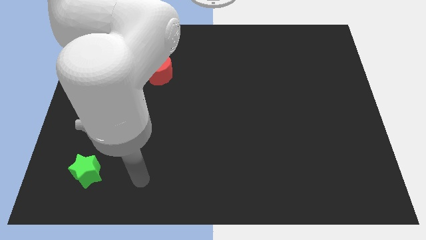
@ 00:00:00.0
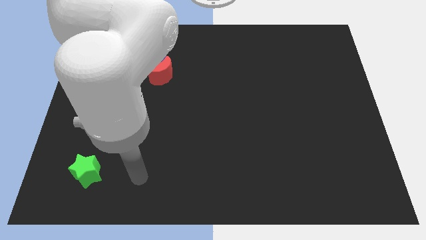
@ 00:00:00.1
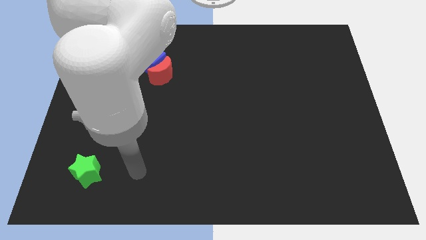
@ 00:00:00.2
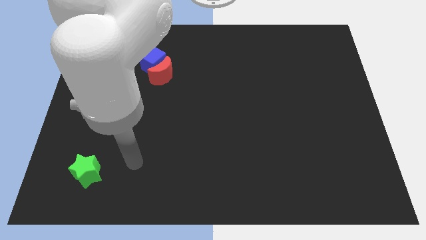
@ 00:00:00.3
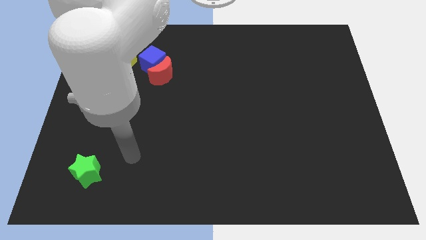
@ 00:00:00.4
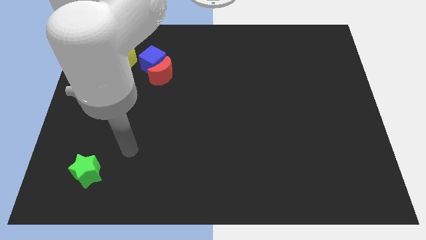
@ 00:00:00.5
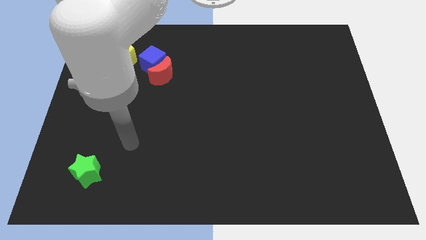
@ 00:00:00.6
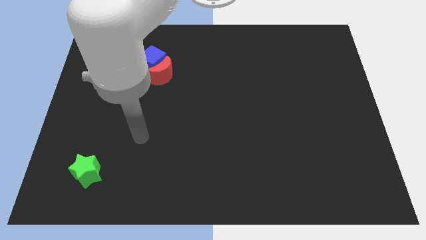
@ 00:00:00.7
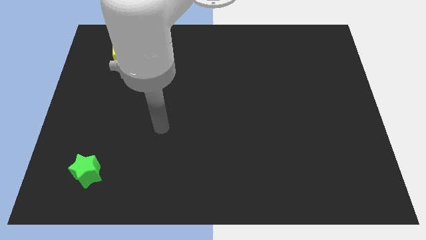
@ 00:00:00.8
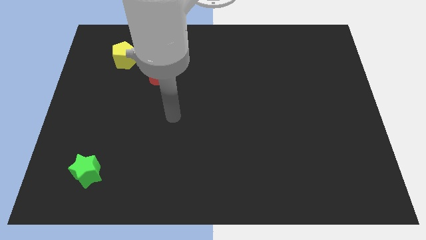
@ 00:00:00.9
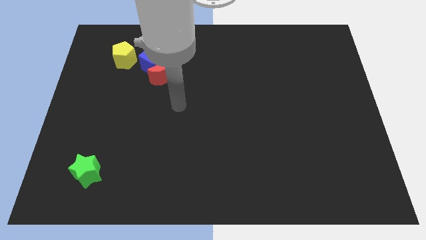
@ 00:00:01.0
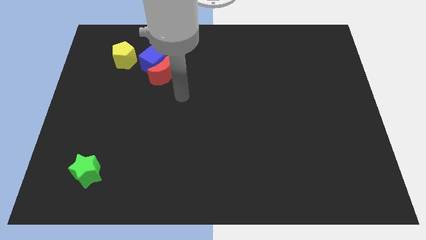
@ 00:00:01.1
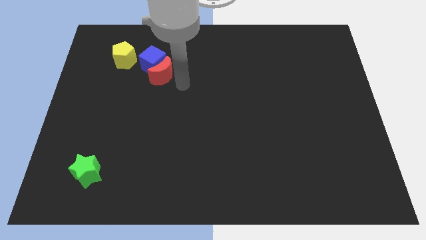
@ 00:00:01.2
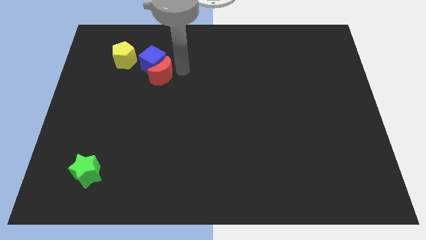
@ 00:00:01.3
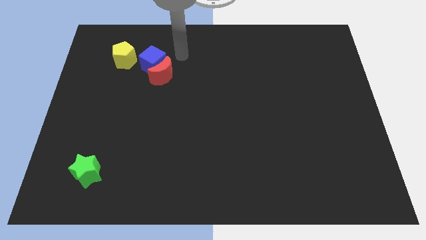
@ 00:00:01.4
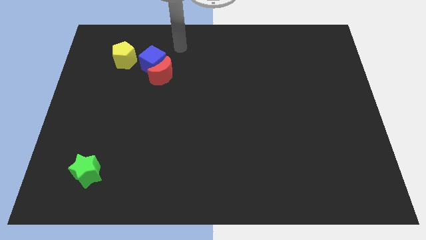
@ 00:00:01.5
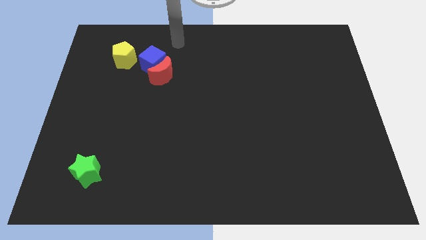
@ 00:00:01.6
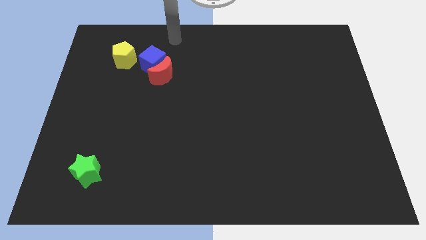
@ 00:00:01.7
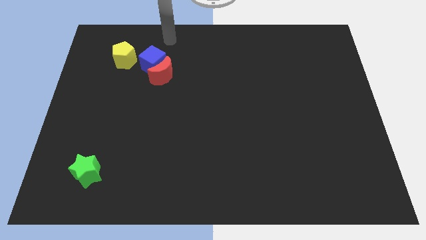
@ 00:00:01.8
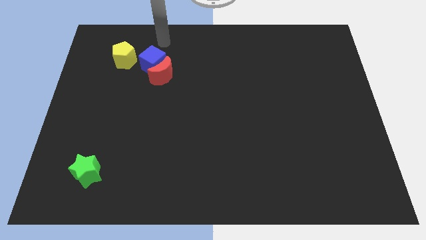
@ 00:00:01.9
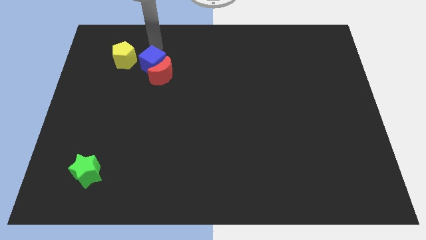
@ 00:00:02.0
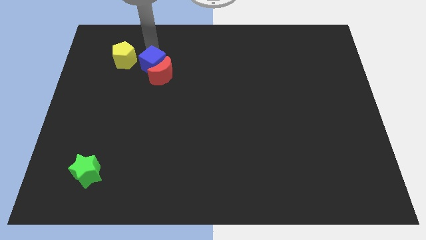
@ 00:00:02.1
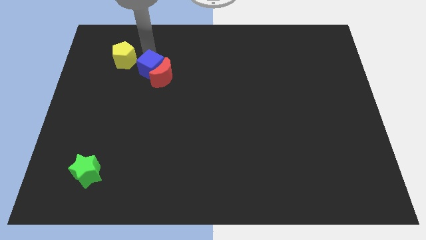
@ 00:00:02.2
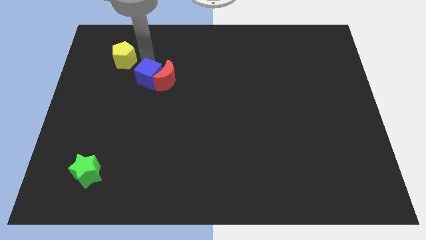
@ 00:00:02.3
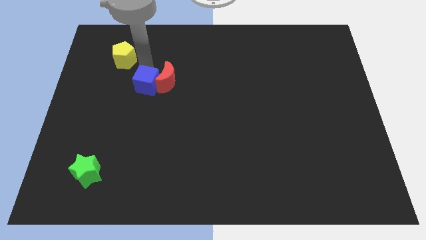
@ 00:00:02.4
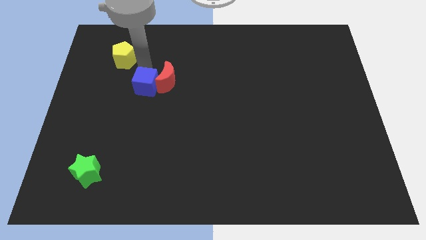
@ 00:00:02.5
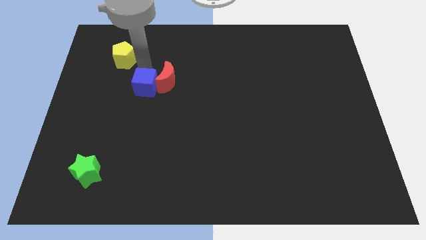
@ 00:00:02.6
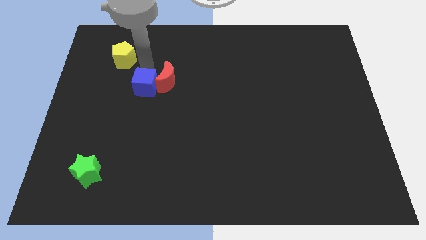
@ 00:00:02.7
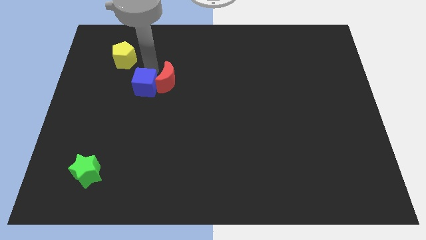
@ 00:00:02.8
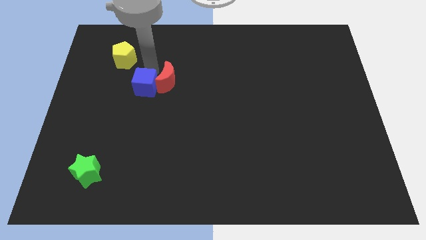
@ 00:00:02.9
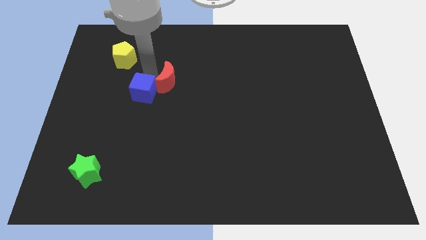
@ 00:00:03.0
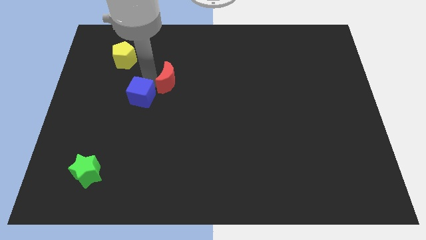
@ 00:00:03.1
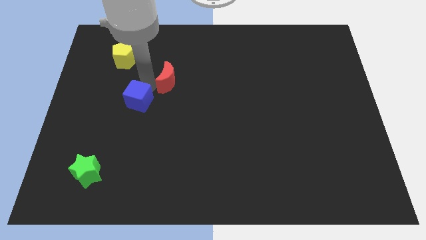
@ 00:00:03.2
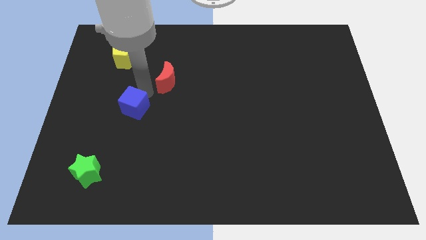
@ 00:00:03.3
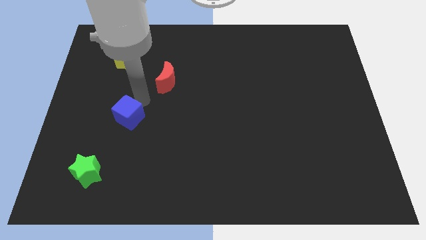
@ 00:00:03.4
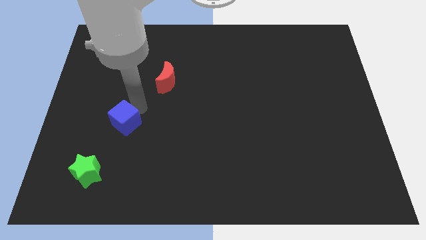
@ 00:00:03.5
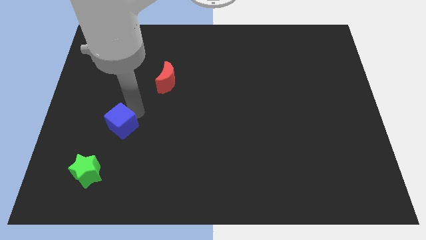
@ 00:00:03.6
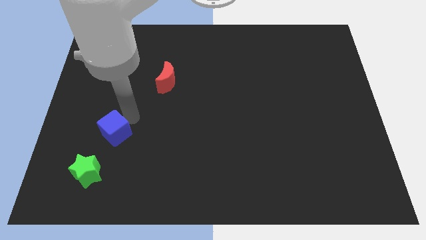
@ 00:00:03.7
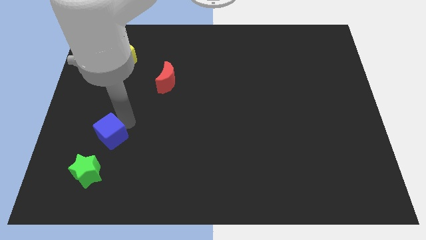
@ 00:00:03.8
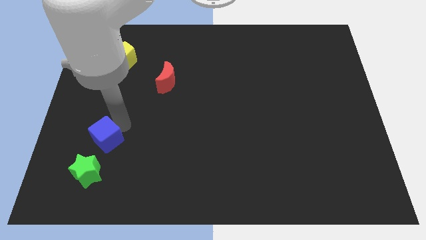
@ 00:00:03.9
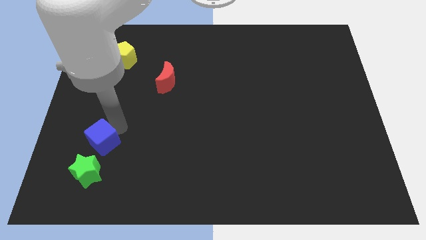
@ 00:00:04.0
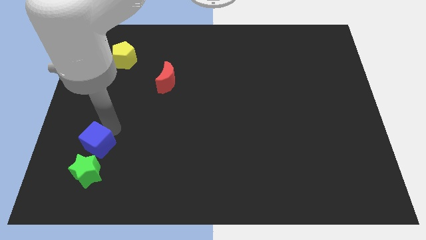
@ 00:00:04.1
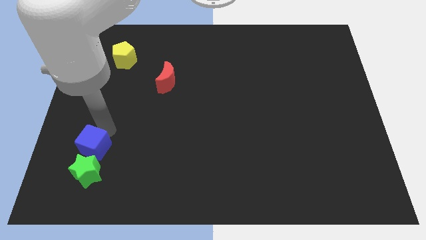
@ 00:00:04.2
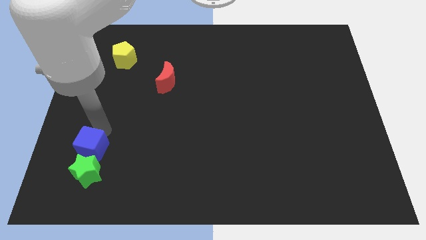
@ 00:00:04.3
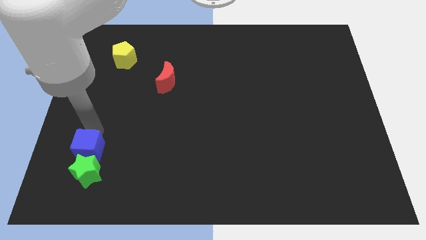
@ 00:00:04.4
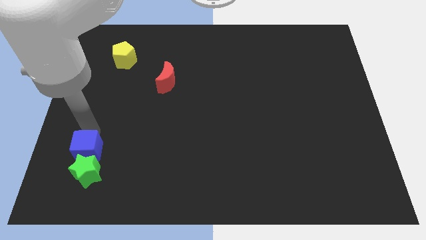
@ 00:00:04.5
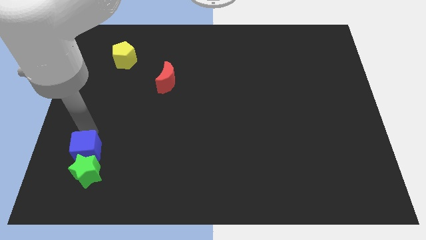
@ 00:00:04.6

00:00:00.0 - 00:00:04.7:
move the blue block towards the star

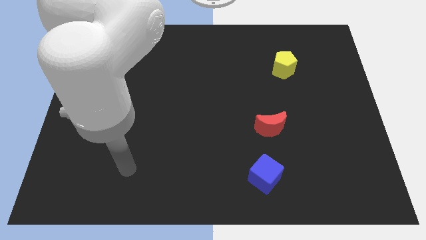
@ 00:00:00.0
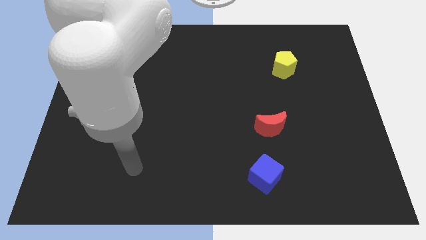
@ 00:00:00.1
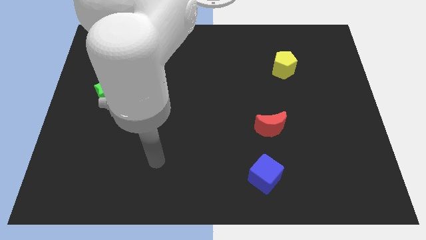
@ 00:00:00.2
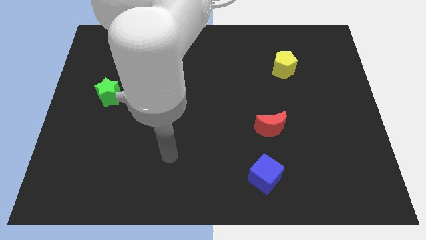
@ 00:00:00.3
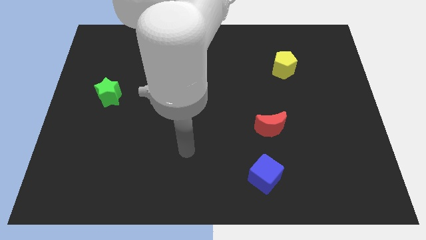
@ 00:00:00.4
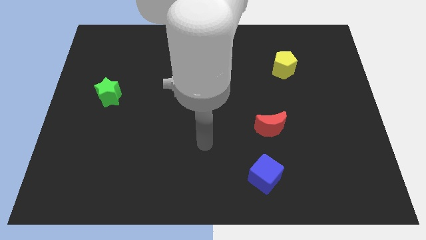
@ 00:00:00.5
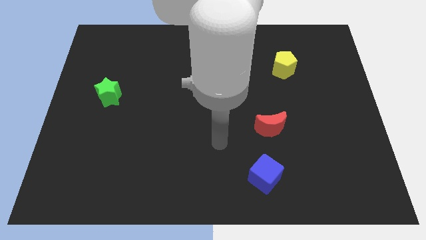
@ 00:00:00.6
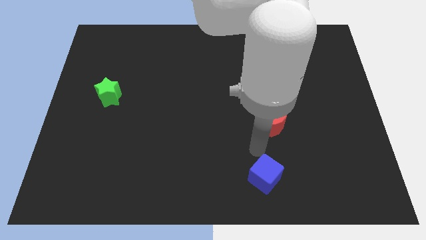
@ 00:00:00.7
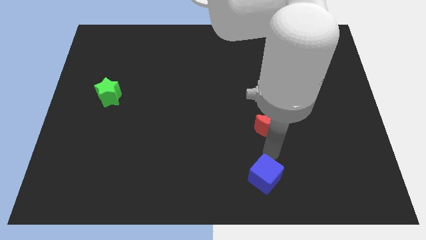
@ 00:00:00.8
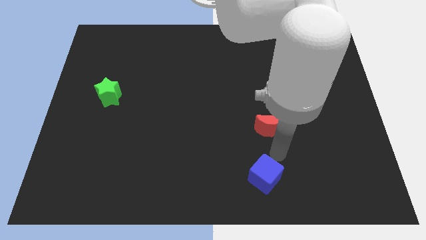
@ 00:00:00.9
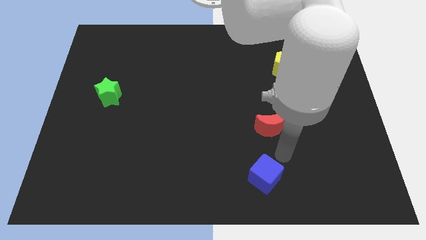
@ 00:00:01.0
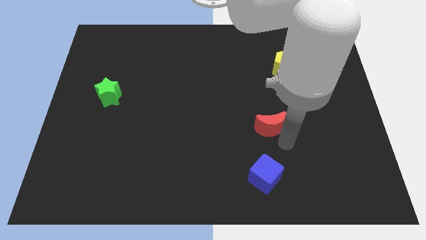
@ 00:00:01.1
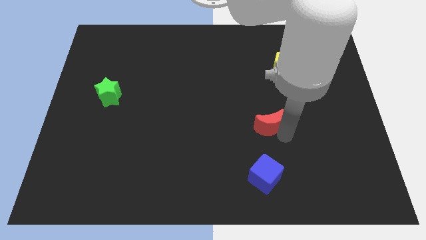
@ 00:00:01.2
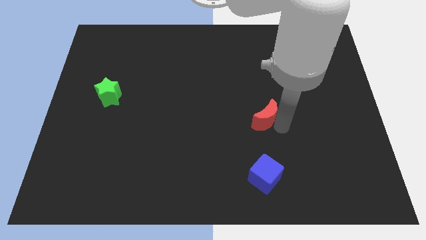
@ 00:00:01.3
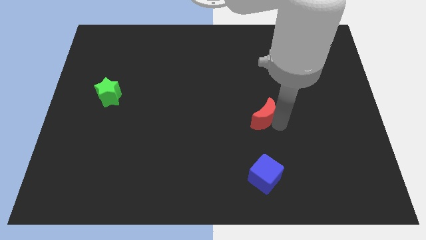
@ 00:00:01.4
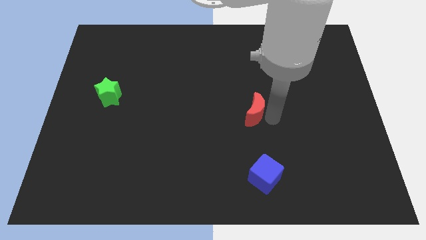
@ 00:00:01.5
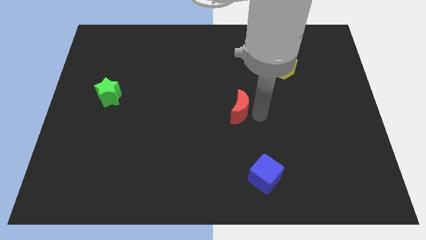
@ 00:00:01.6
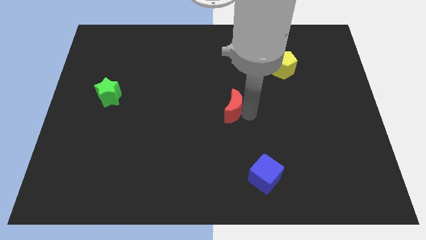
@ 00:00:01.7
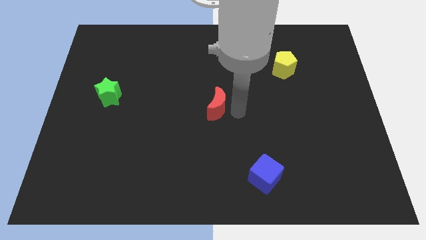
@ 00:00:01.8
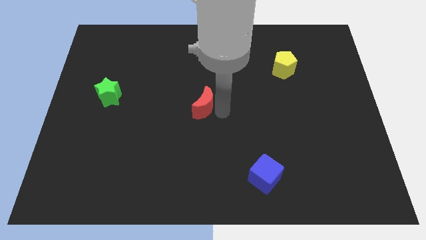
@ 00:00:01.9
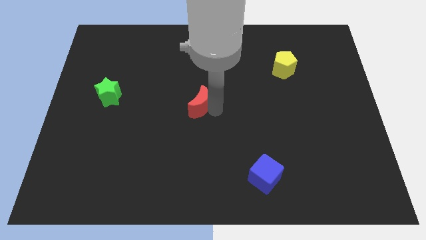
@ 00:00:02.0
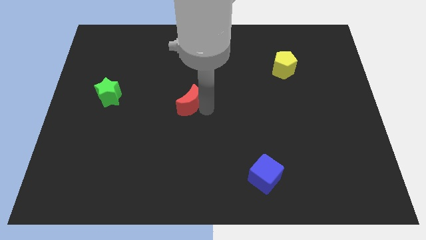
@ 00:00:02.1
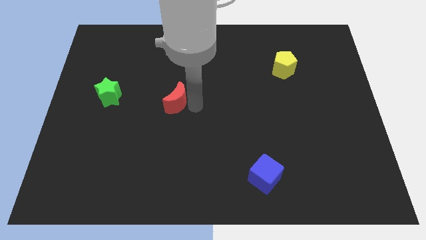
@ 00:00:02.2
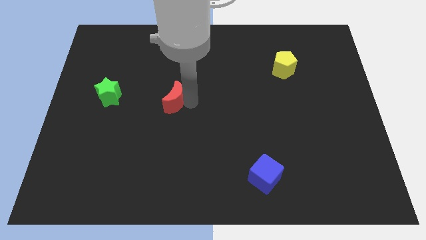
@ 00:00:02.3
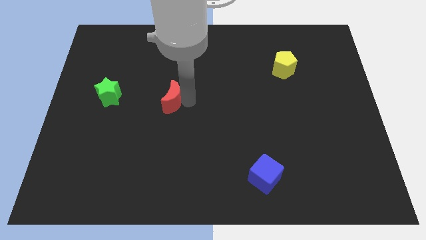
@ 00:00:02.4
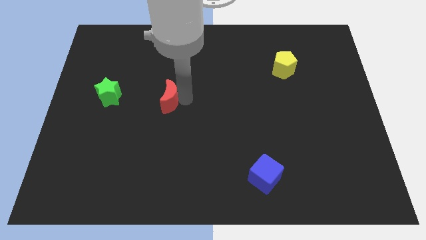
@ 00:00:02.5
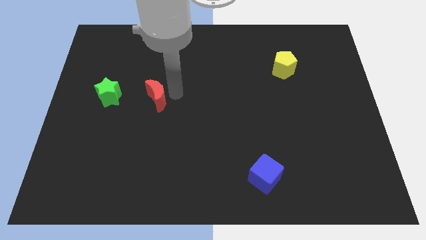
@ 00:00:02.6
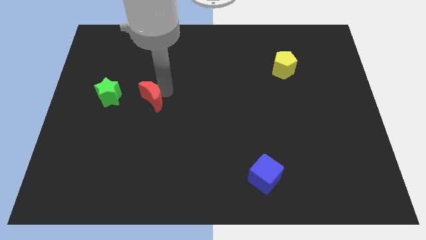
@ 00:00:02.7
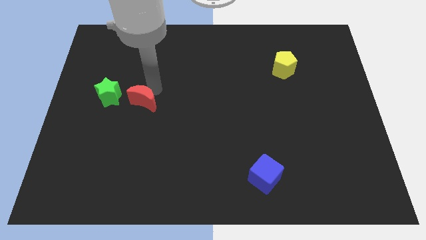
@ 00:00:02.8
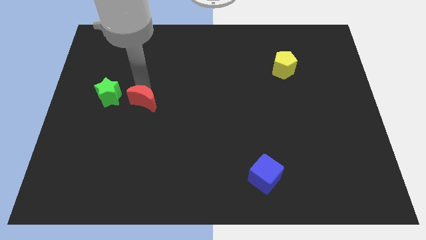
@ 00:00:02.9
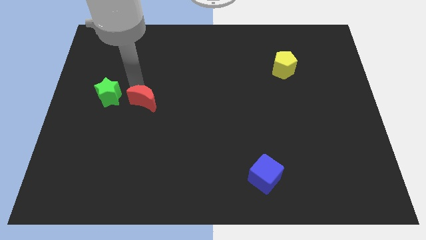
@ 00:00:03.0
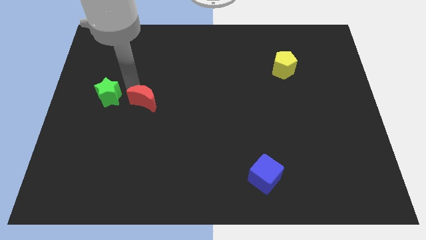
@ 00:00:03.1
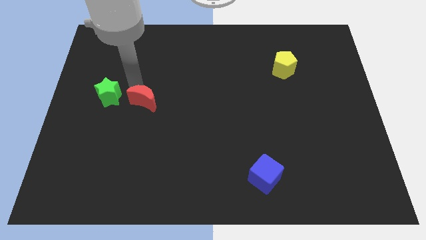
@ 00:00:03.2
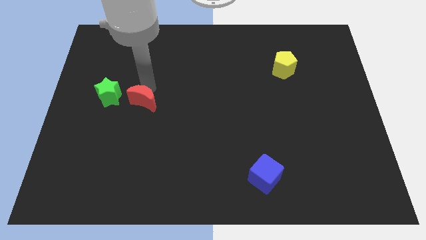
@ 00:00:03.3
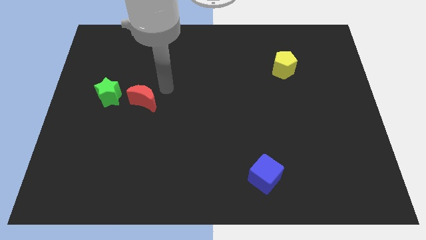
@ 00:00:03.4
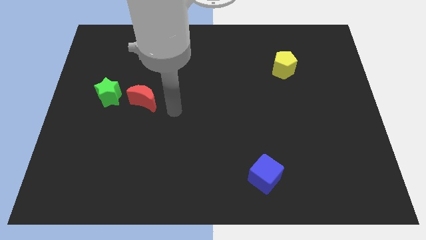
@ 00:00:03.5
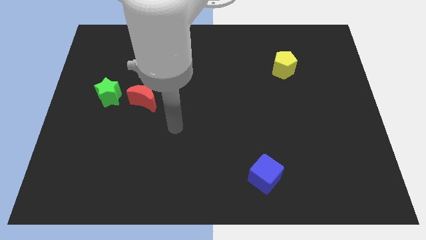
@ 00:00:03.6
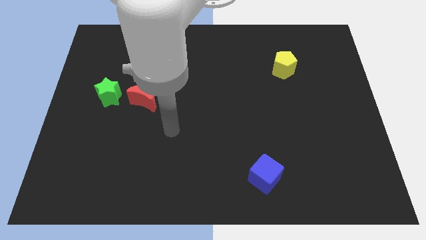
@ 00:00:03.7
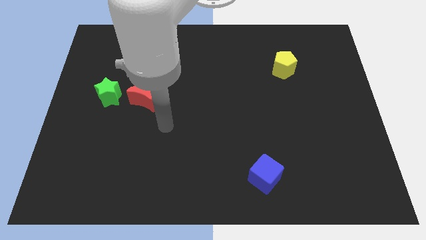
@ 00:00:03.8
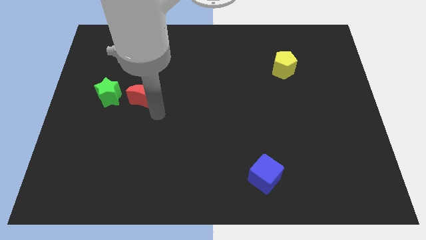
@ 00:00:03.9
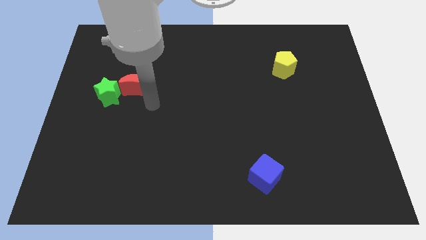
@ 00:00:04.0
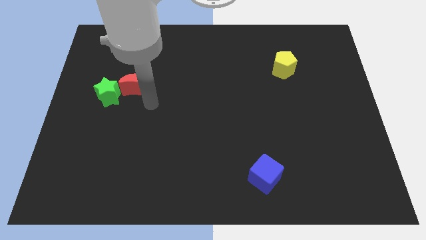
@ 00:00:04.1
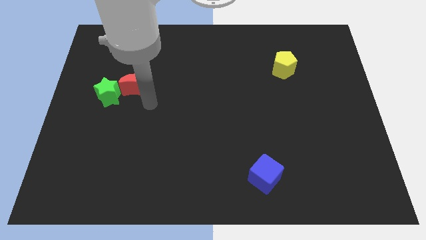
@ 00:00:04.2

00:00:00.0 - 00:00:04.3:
put the red moon close to the green block
